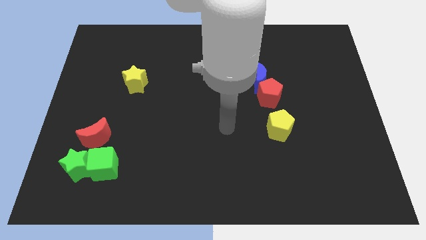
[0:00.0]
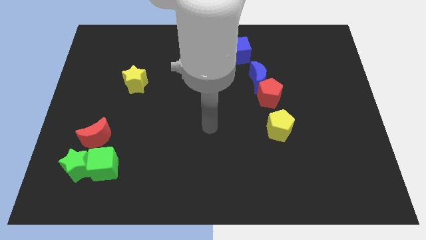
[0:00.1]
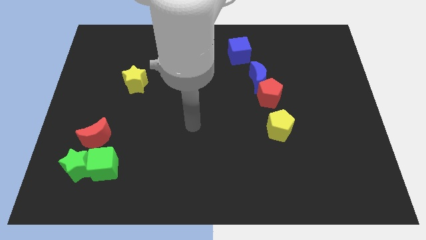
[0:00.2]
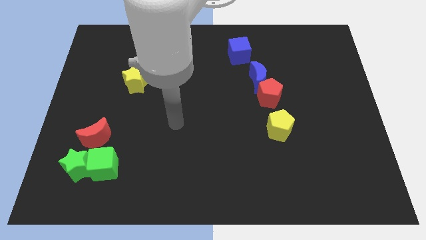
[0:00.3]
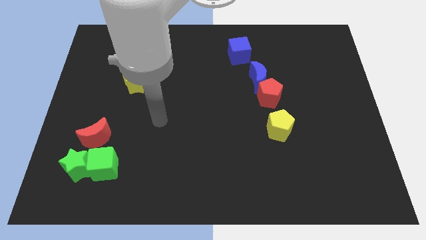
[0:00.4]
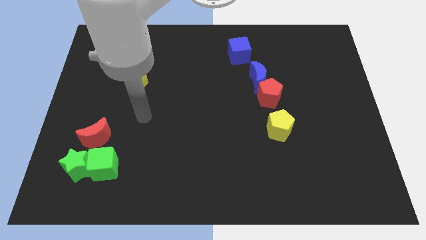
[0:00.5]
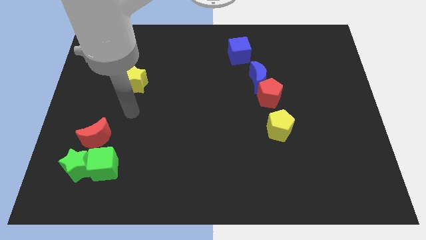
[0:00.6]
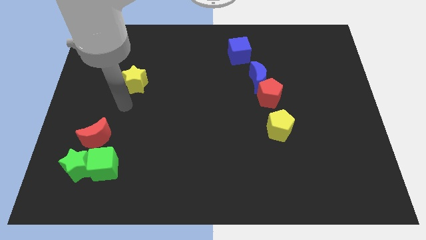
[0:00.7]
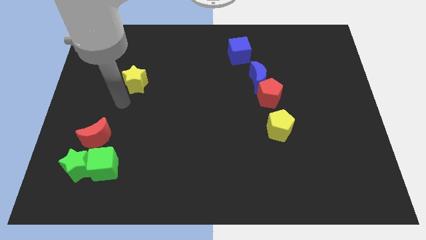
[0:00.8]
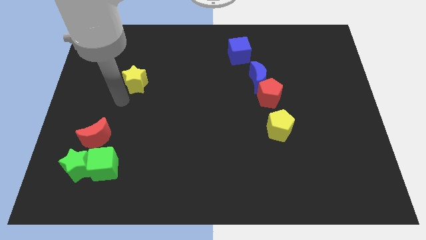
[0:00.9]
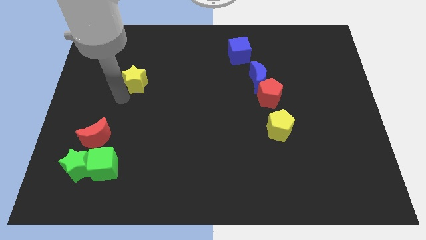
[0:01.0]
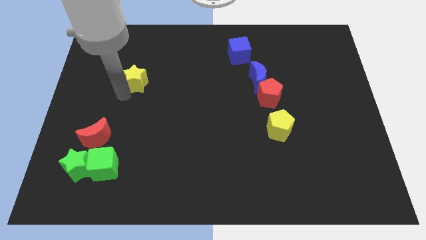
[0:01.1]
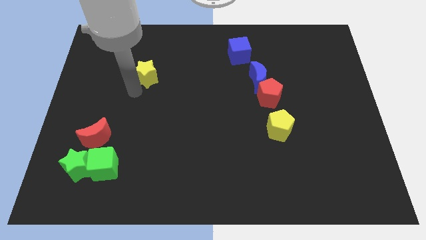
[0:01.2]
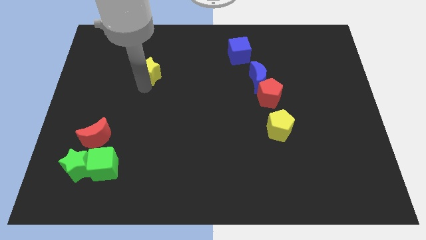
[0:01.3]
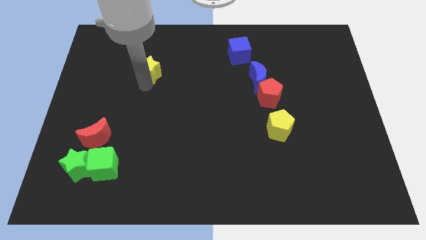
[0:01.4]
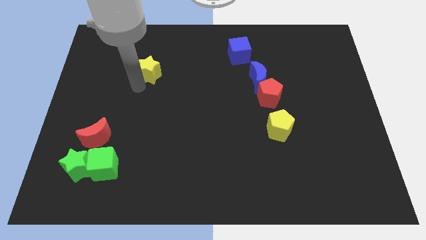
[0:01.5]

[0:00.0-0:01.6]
push the yellow star up slightly

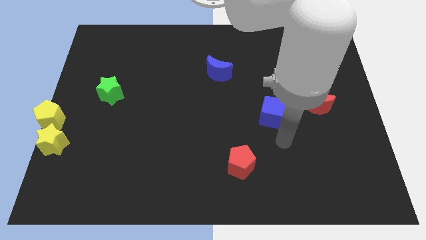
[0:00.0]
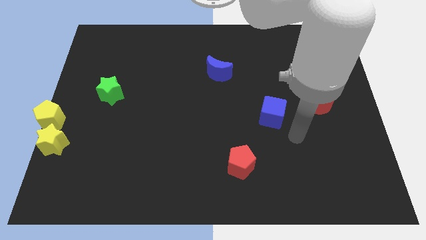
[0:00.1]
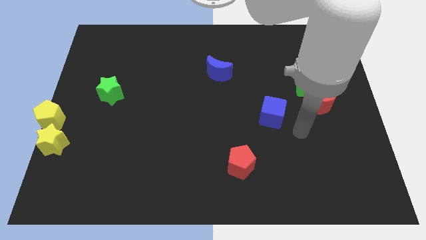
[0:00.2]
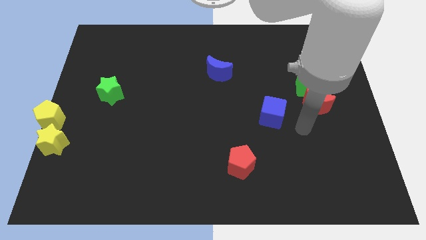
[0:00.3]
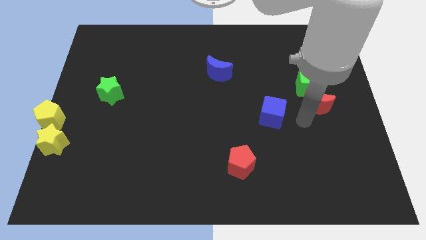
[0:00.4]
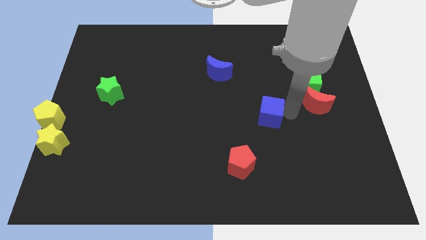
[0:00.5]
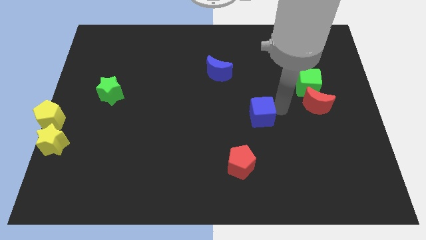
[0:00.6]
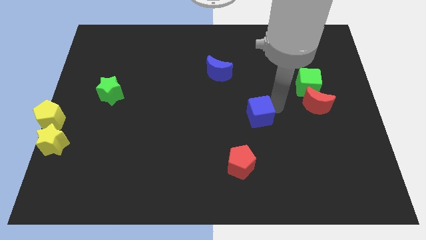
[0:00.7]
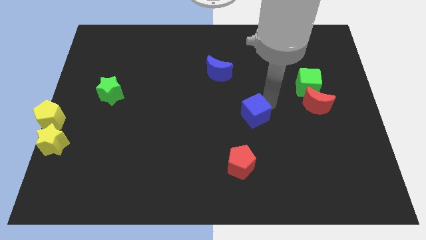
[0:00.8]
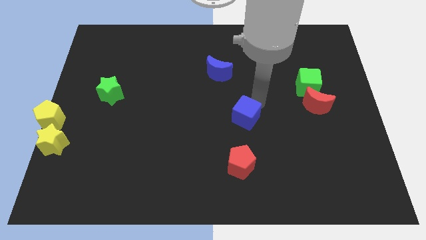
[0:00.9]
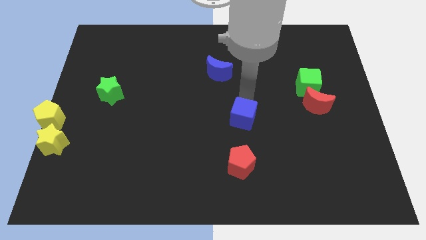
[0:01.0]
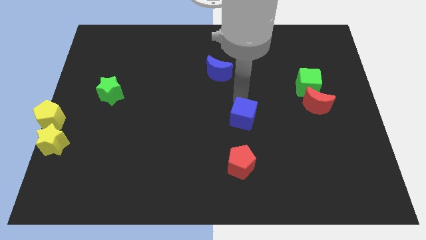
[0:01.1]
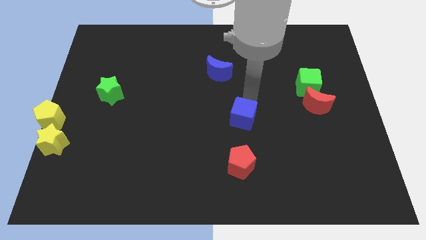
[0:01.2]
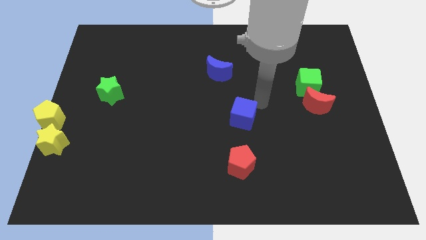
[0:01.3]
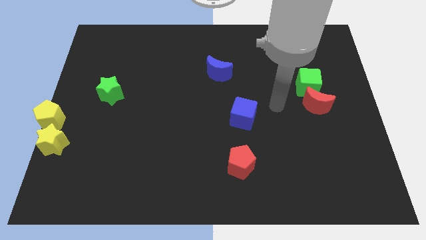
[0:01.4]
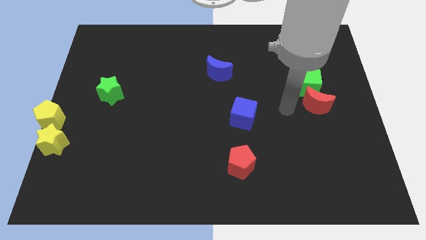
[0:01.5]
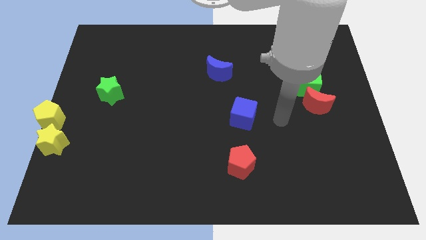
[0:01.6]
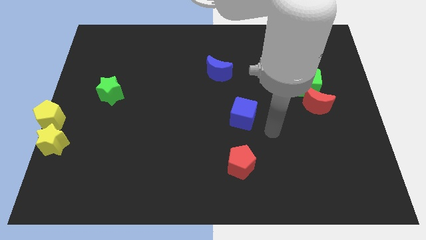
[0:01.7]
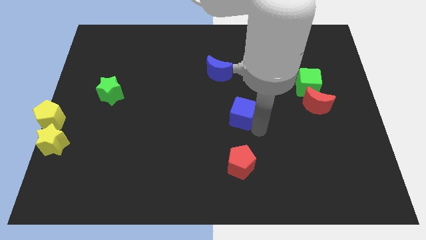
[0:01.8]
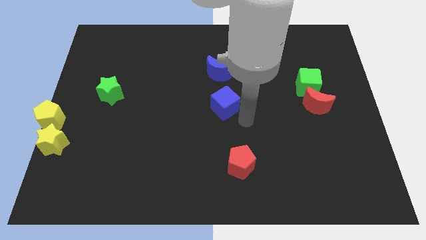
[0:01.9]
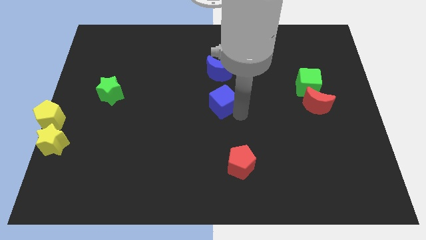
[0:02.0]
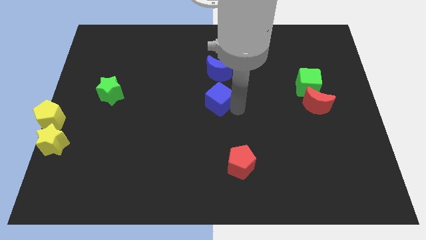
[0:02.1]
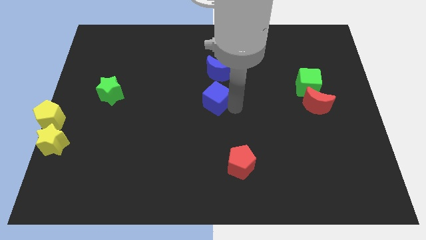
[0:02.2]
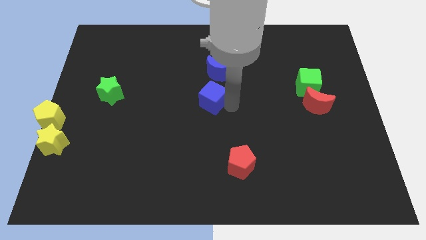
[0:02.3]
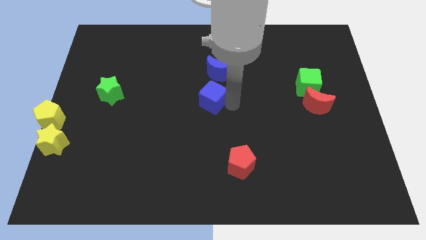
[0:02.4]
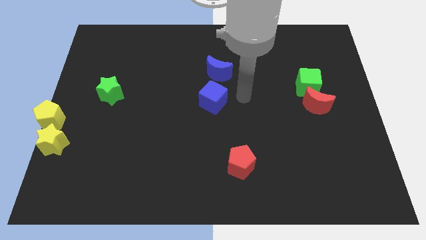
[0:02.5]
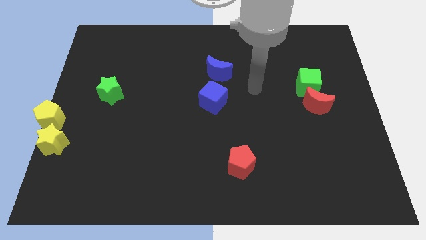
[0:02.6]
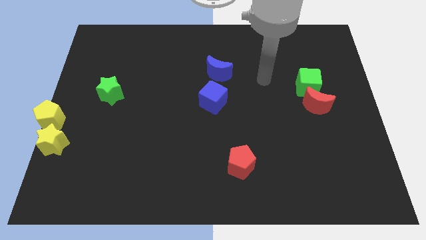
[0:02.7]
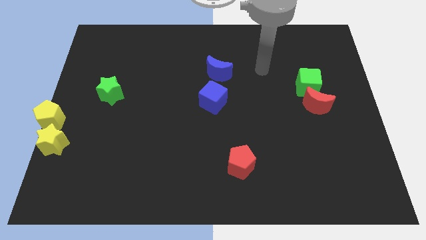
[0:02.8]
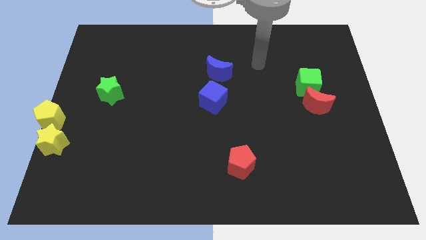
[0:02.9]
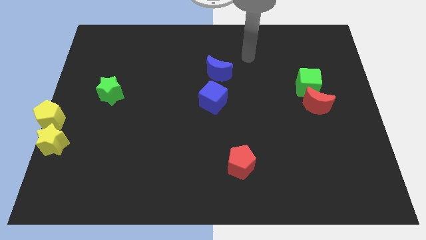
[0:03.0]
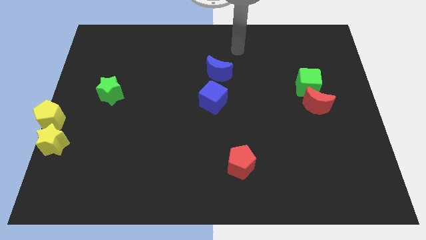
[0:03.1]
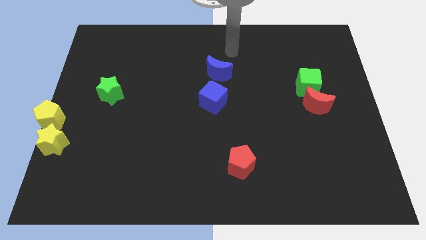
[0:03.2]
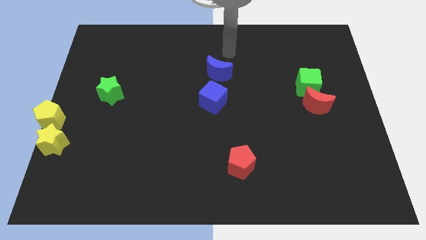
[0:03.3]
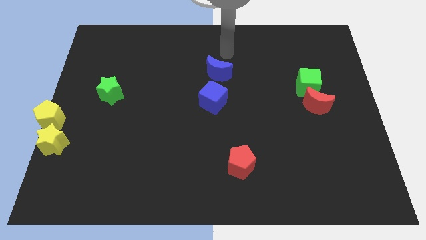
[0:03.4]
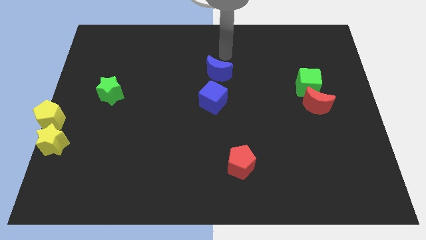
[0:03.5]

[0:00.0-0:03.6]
move the blue cube to the center

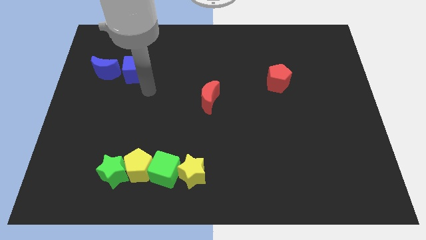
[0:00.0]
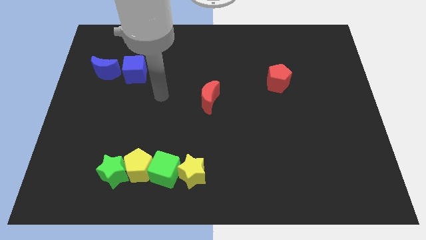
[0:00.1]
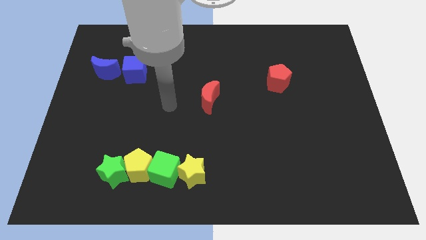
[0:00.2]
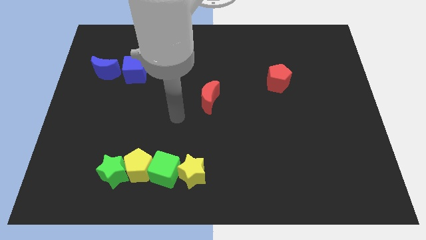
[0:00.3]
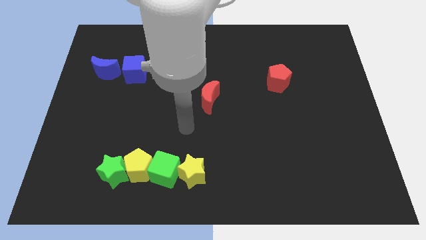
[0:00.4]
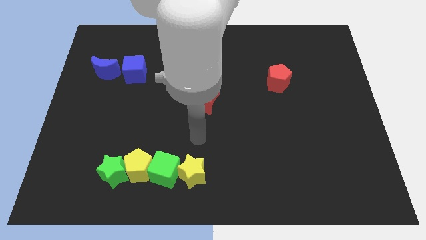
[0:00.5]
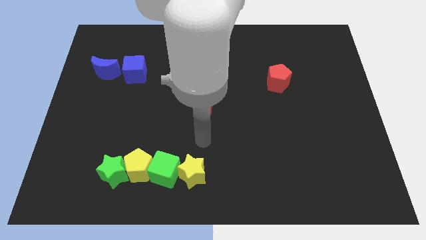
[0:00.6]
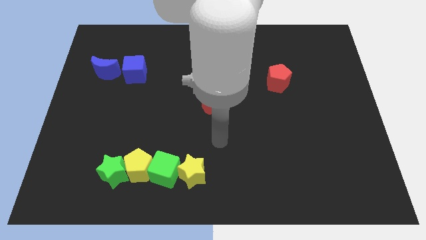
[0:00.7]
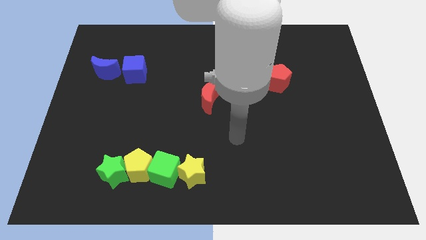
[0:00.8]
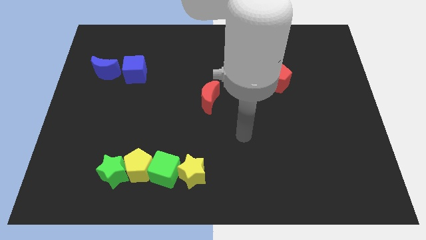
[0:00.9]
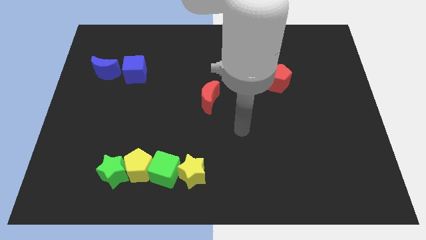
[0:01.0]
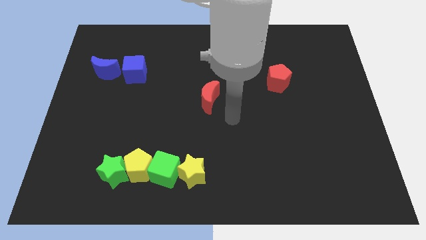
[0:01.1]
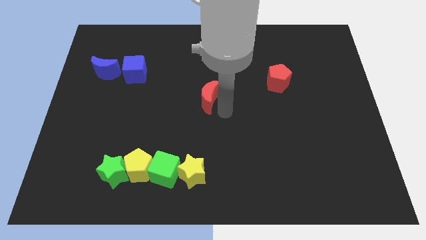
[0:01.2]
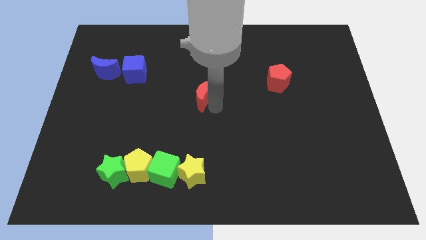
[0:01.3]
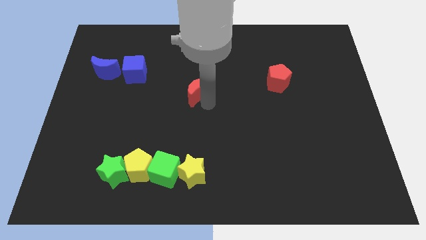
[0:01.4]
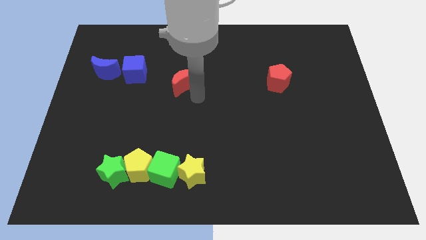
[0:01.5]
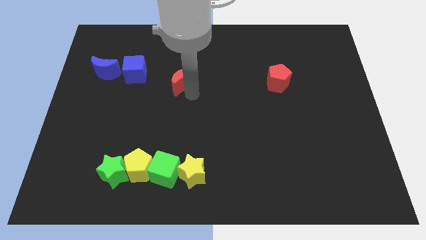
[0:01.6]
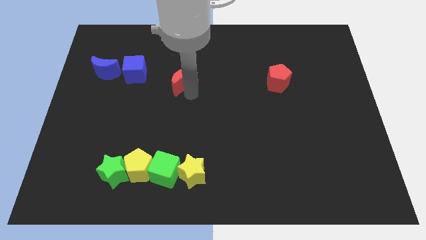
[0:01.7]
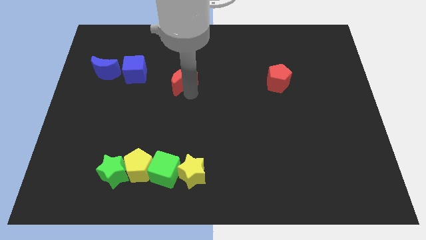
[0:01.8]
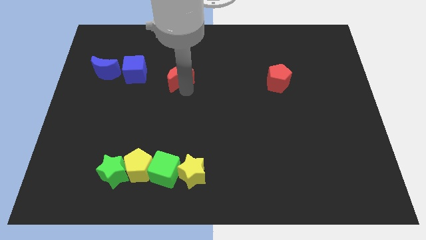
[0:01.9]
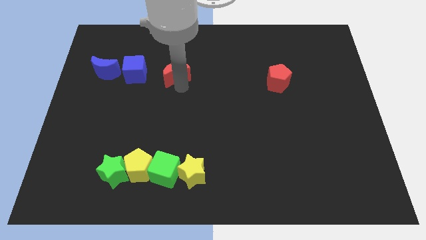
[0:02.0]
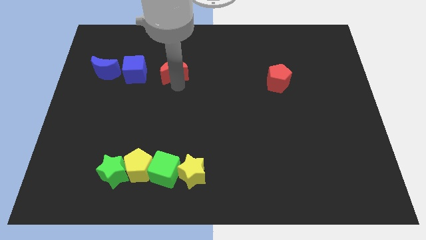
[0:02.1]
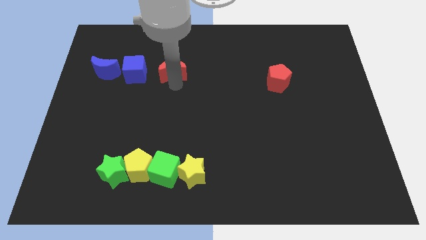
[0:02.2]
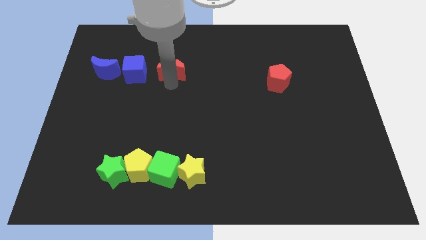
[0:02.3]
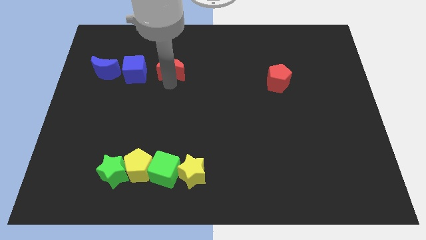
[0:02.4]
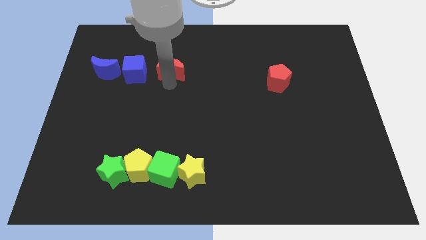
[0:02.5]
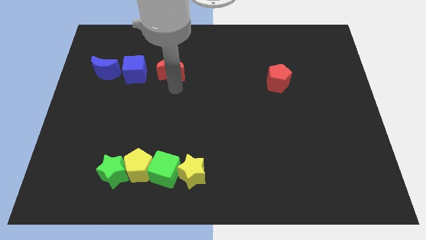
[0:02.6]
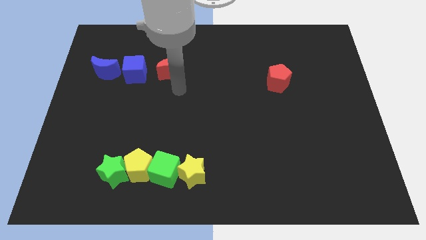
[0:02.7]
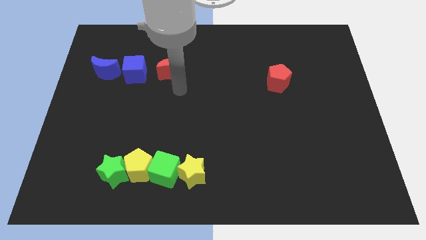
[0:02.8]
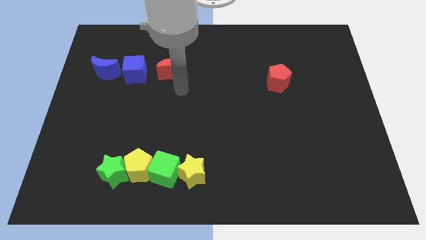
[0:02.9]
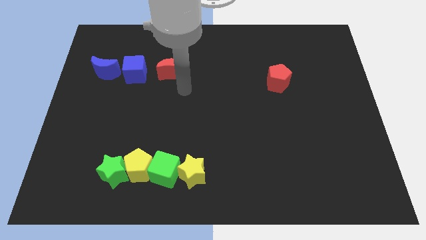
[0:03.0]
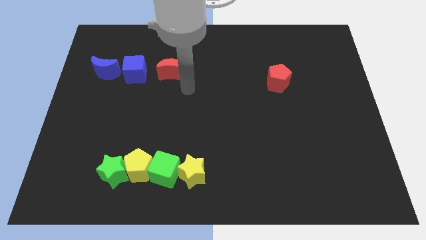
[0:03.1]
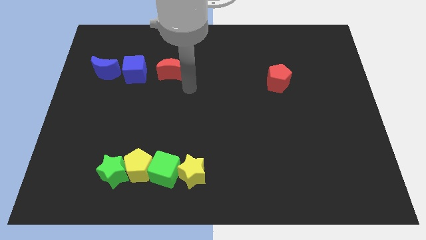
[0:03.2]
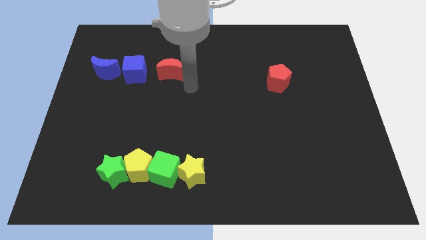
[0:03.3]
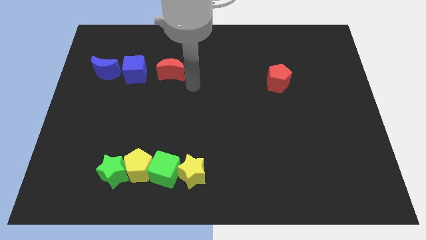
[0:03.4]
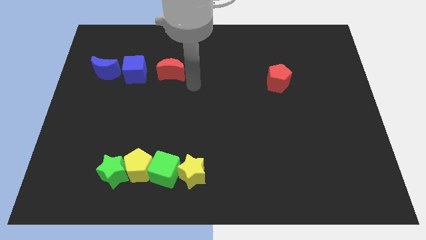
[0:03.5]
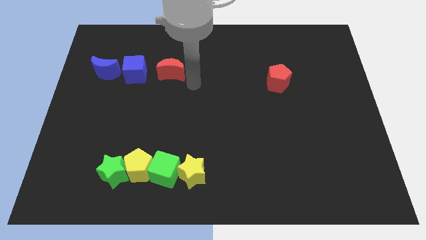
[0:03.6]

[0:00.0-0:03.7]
put the red moon at the right side of the blue cube
